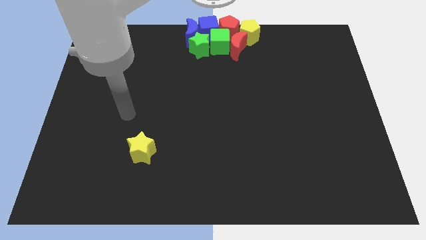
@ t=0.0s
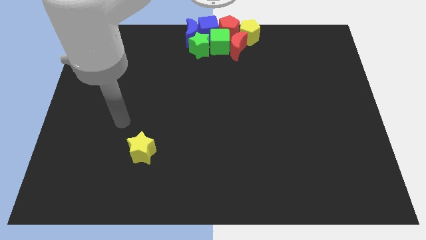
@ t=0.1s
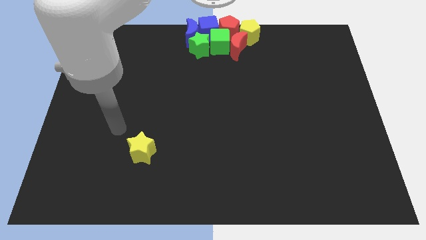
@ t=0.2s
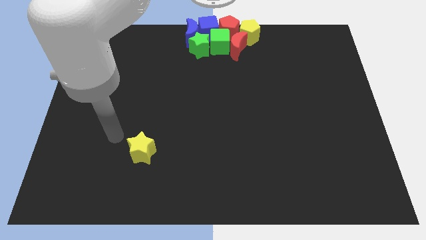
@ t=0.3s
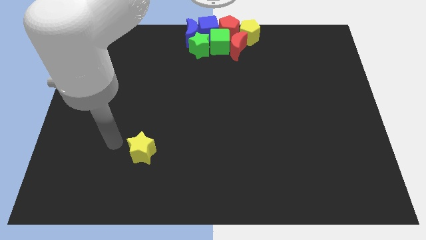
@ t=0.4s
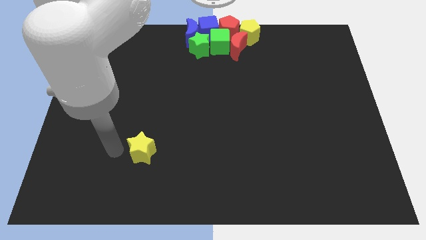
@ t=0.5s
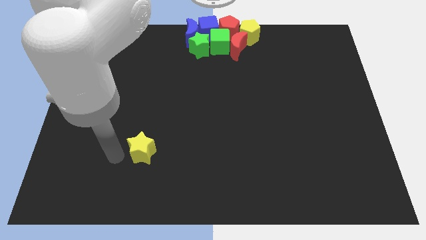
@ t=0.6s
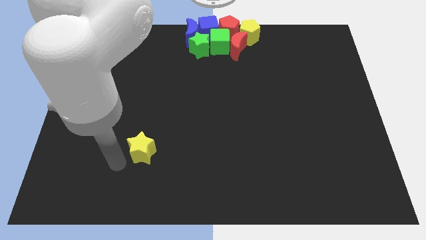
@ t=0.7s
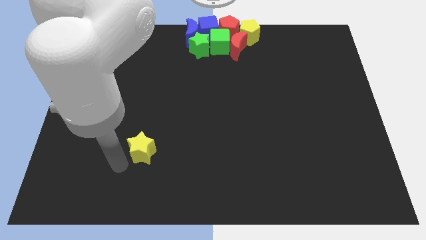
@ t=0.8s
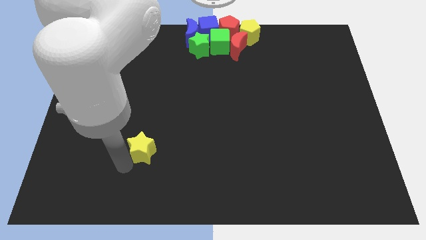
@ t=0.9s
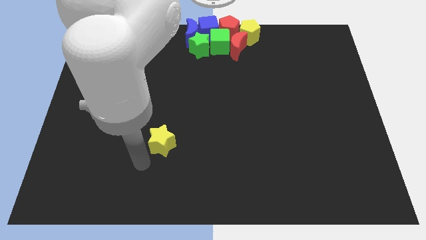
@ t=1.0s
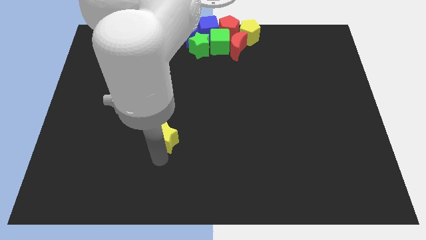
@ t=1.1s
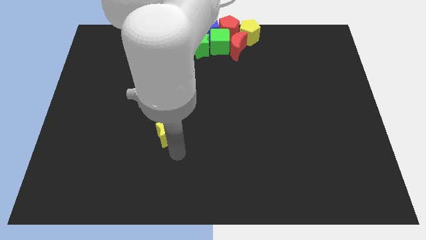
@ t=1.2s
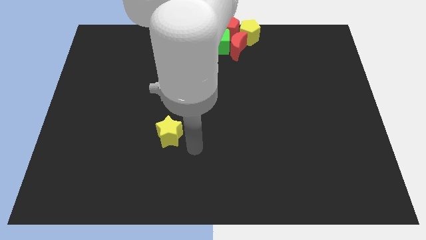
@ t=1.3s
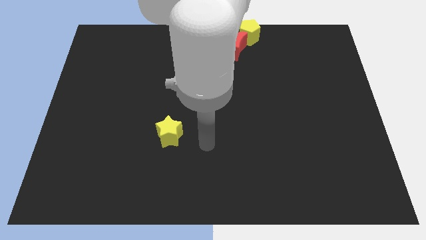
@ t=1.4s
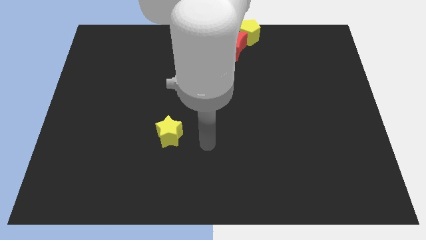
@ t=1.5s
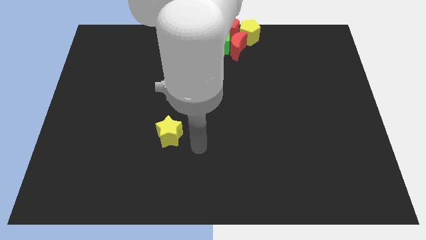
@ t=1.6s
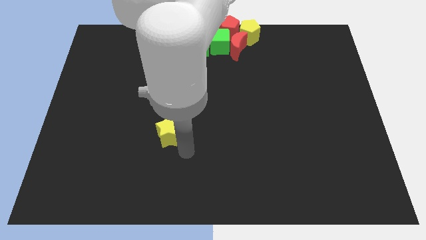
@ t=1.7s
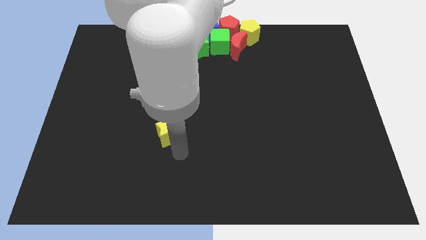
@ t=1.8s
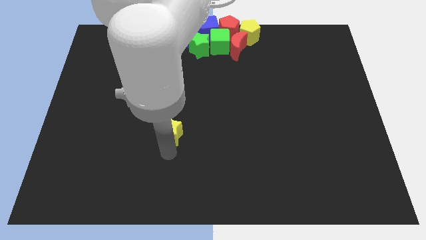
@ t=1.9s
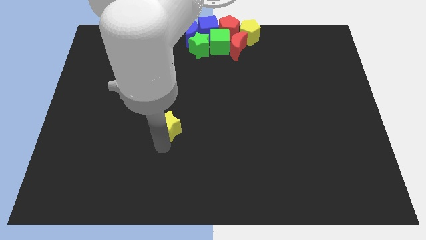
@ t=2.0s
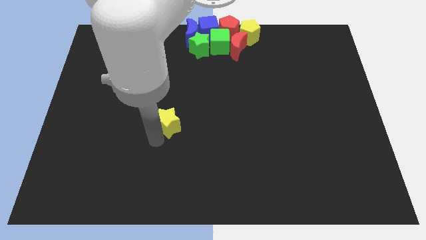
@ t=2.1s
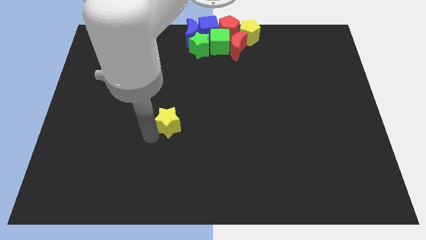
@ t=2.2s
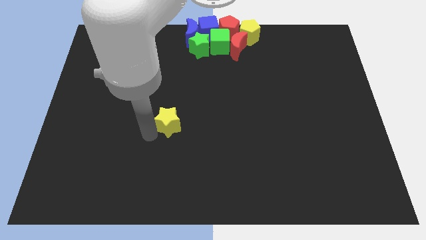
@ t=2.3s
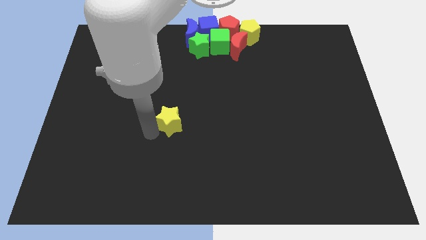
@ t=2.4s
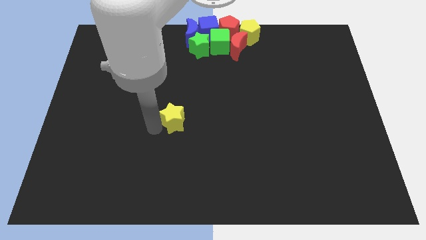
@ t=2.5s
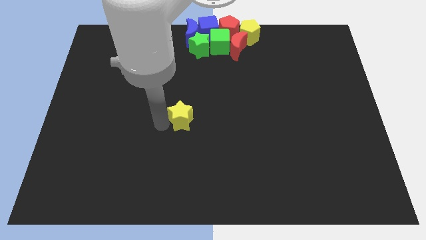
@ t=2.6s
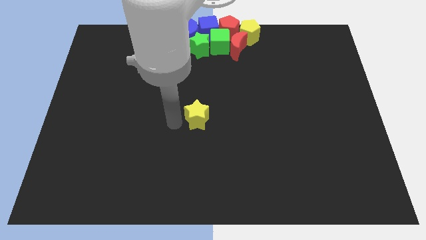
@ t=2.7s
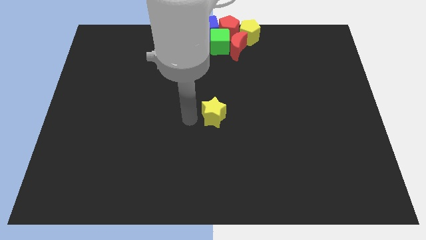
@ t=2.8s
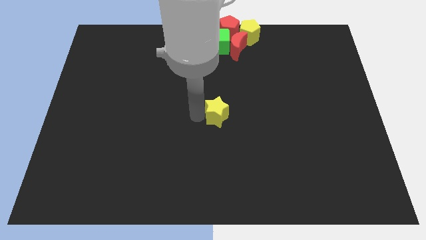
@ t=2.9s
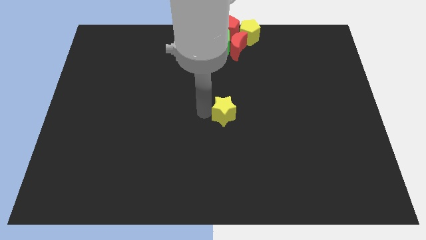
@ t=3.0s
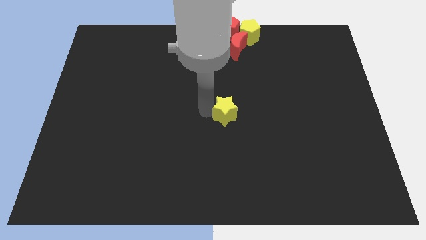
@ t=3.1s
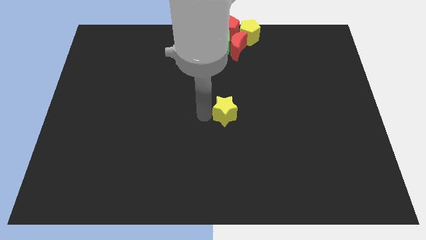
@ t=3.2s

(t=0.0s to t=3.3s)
put the yellow star vertically below the group of blocks

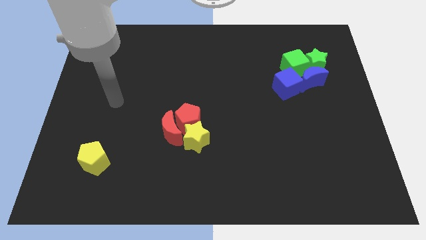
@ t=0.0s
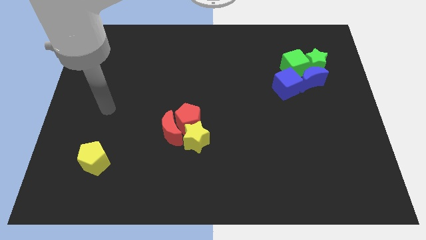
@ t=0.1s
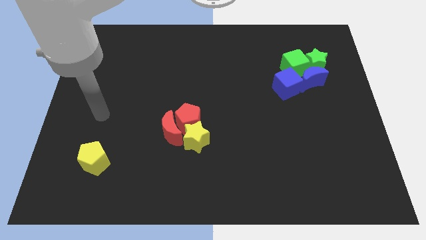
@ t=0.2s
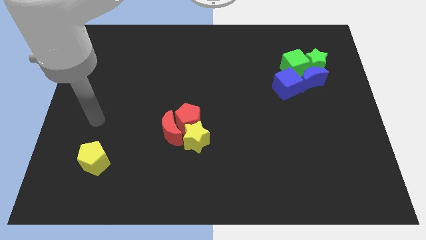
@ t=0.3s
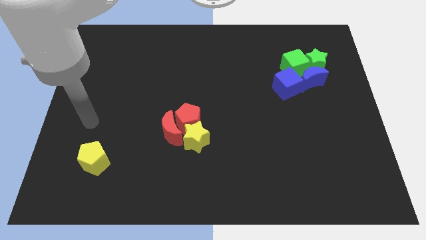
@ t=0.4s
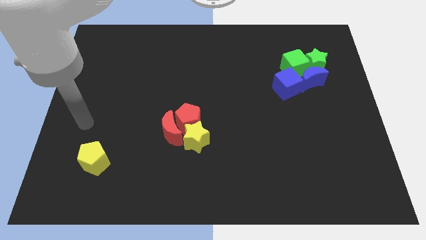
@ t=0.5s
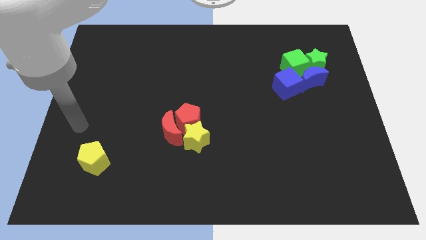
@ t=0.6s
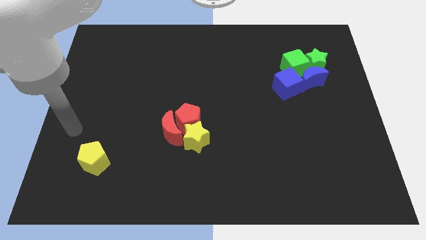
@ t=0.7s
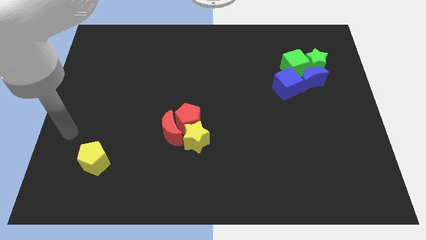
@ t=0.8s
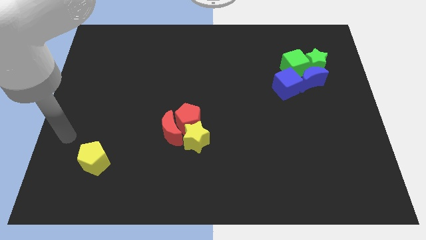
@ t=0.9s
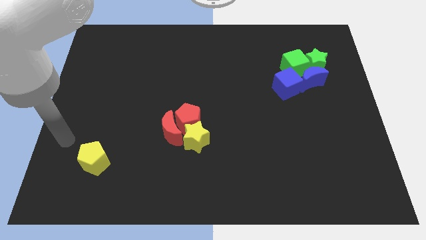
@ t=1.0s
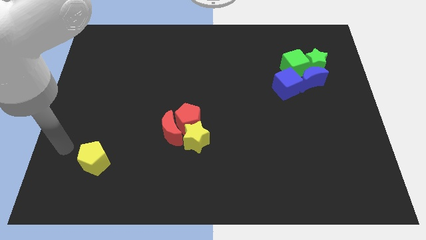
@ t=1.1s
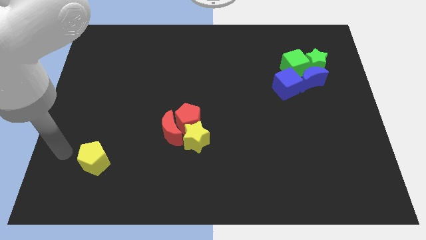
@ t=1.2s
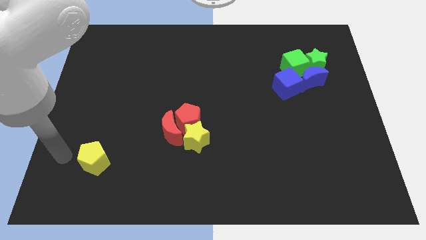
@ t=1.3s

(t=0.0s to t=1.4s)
place your arm to the left of the yellow pentagon

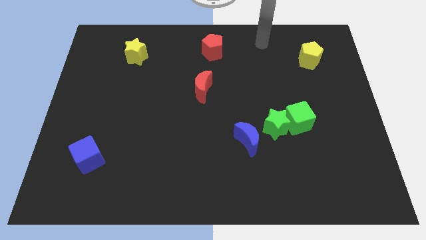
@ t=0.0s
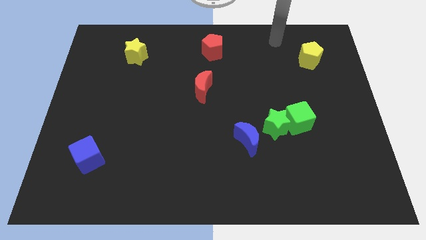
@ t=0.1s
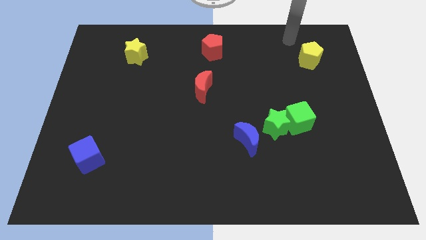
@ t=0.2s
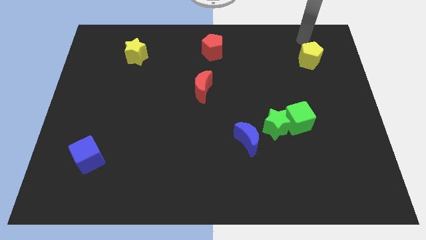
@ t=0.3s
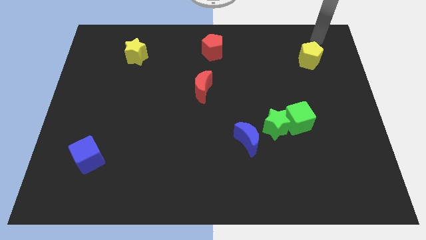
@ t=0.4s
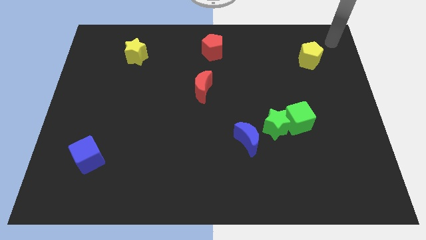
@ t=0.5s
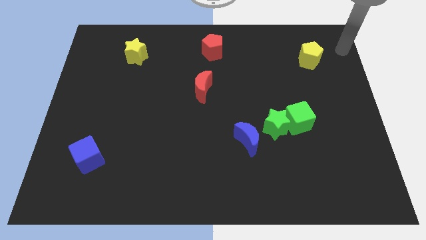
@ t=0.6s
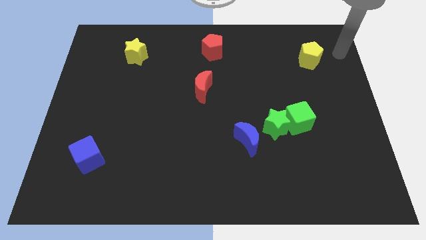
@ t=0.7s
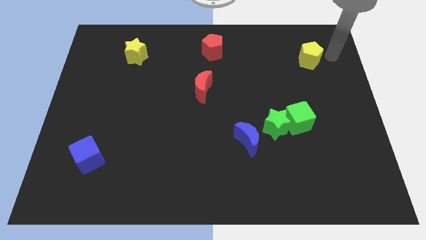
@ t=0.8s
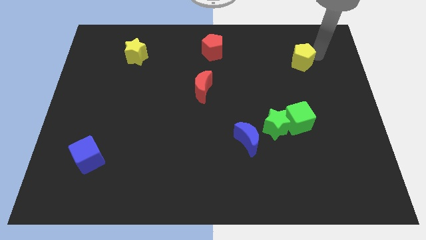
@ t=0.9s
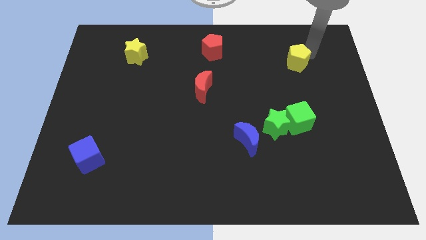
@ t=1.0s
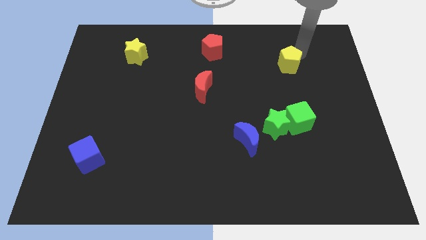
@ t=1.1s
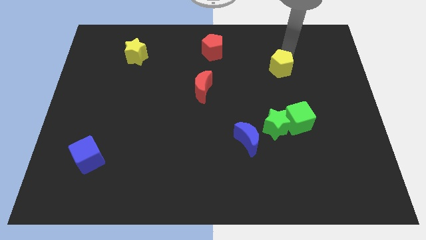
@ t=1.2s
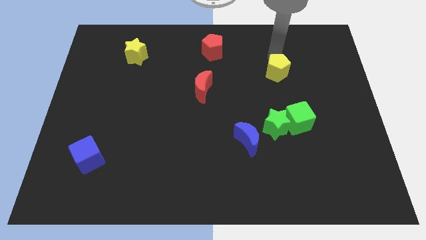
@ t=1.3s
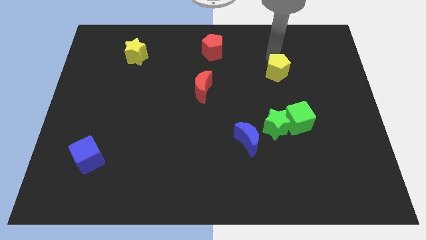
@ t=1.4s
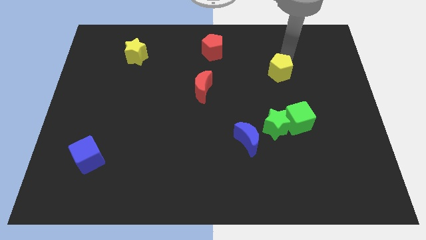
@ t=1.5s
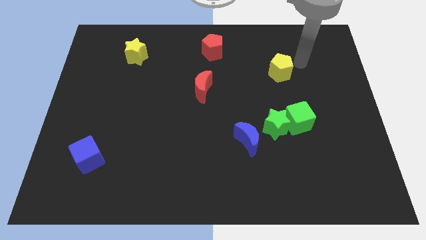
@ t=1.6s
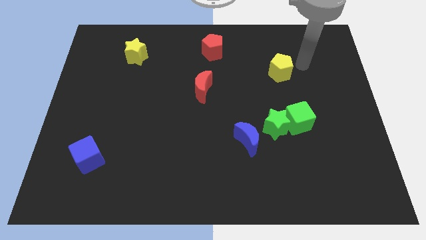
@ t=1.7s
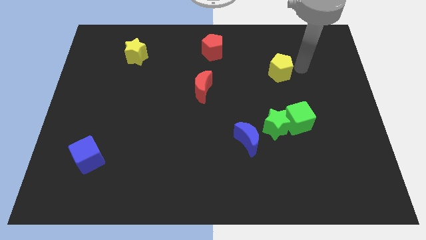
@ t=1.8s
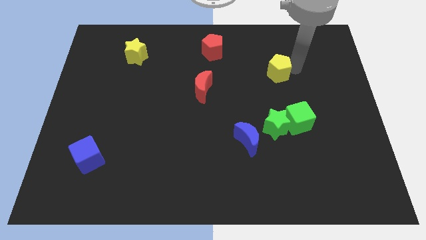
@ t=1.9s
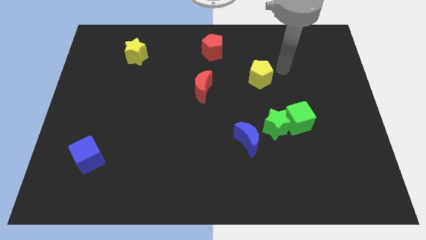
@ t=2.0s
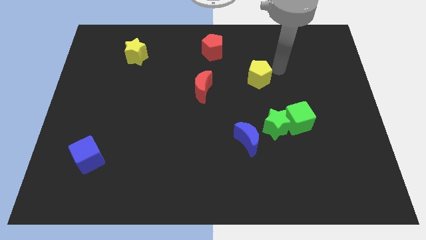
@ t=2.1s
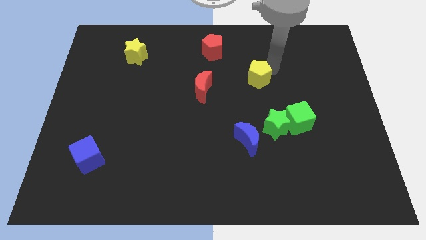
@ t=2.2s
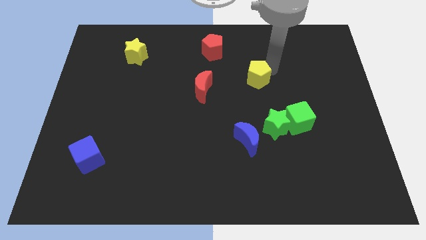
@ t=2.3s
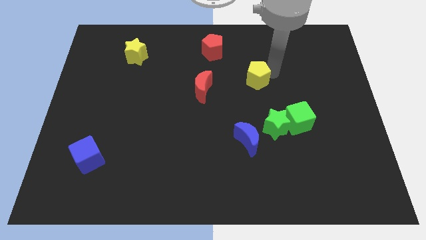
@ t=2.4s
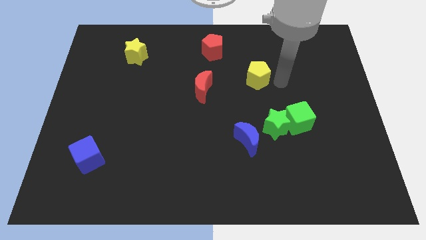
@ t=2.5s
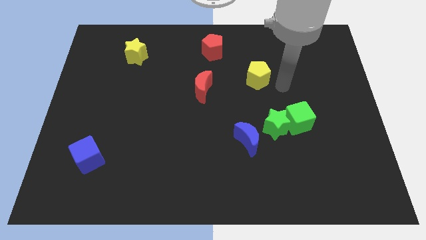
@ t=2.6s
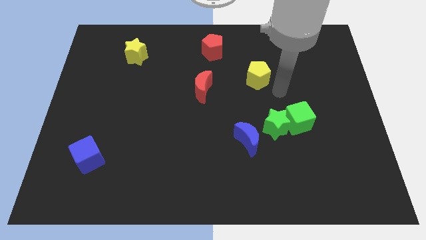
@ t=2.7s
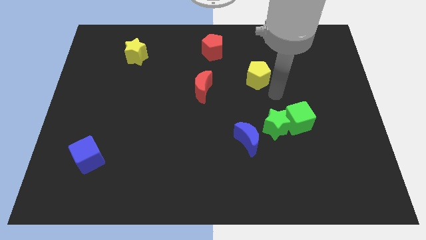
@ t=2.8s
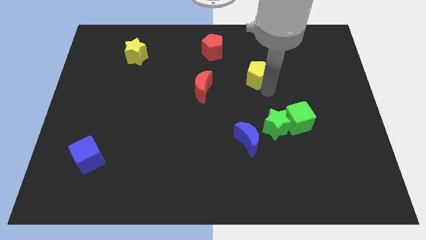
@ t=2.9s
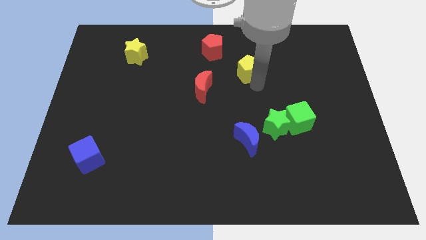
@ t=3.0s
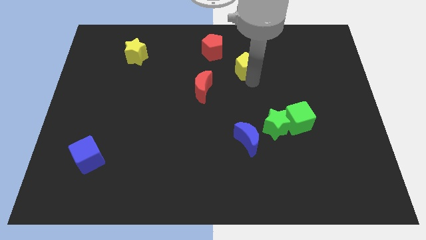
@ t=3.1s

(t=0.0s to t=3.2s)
slide the yellow pentagon above the blue moon

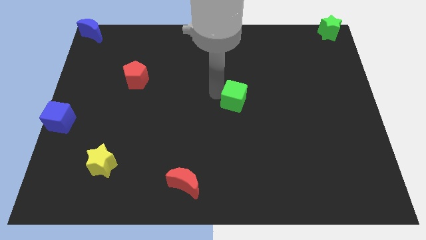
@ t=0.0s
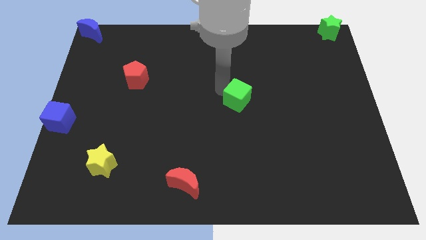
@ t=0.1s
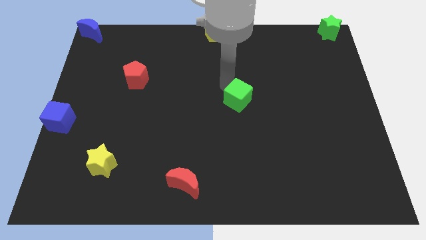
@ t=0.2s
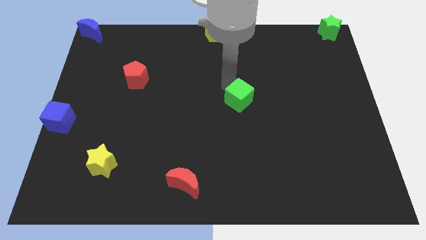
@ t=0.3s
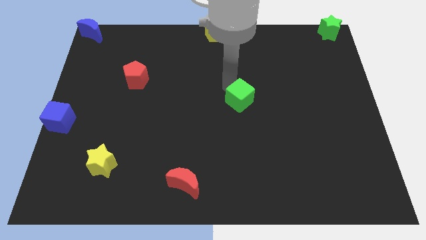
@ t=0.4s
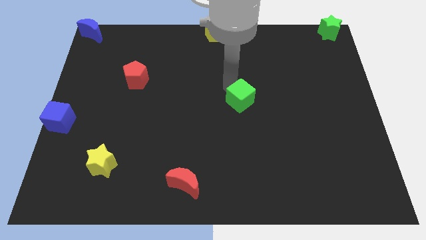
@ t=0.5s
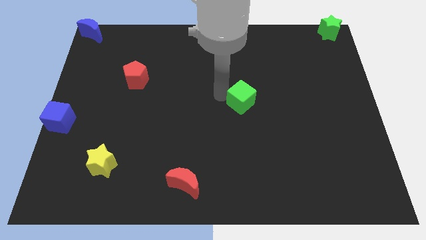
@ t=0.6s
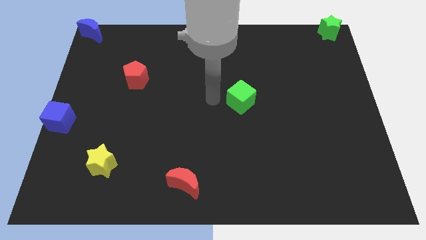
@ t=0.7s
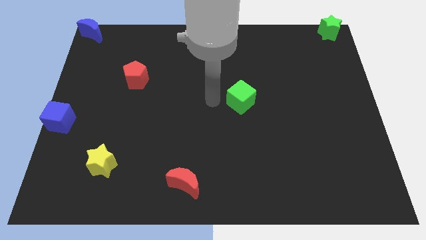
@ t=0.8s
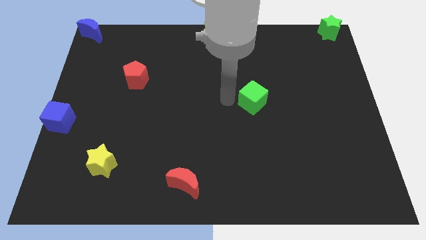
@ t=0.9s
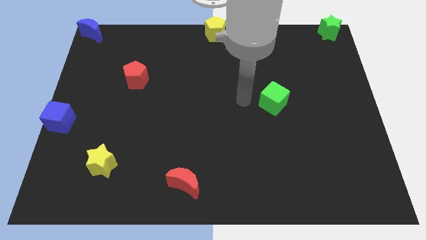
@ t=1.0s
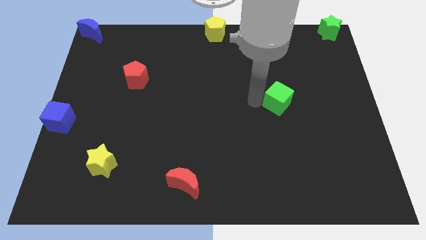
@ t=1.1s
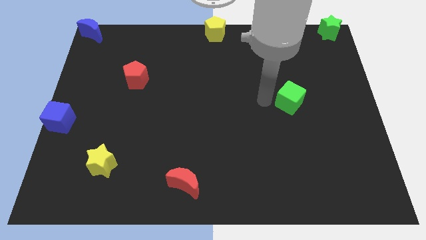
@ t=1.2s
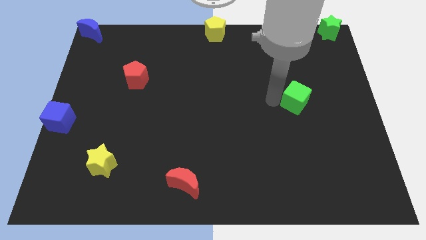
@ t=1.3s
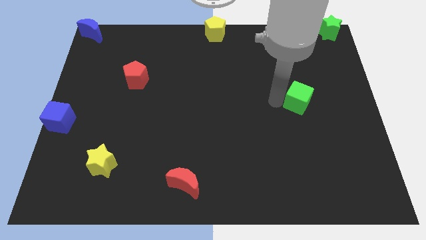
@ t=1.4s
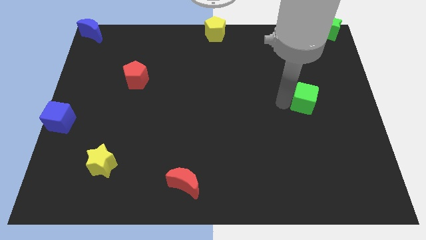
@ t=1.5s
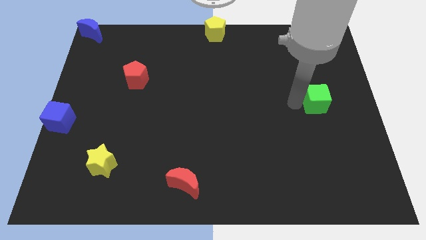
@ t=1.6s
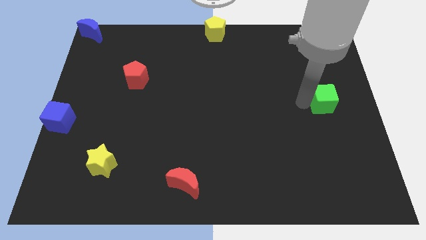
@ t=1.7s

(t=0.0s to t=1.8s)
push the green cube towards the center right of the board
